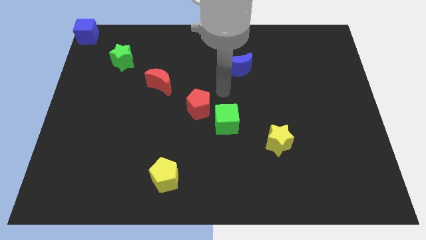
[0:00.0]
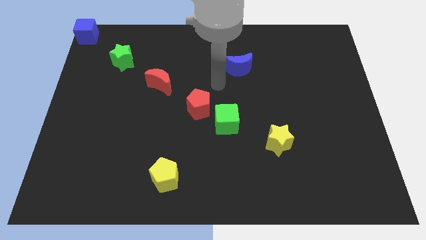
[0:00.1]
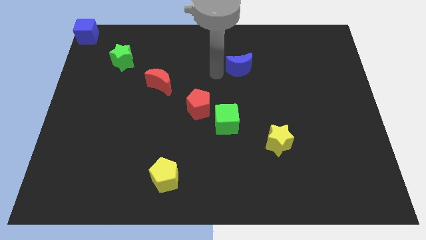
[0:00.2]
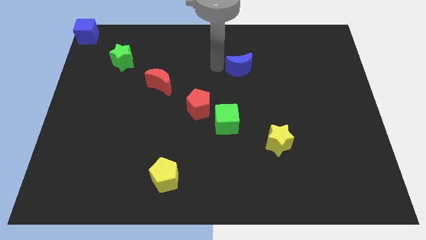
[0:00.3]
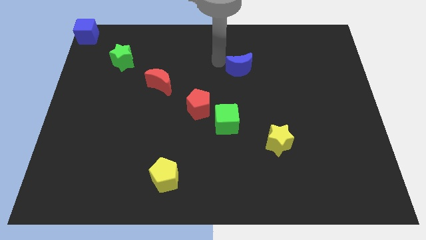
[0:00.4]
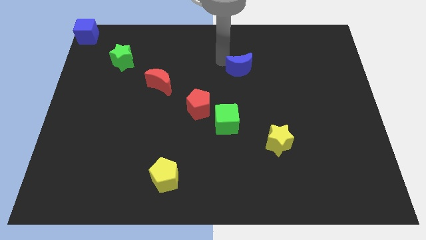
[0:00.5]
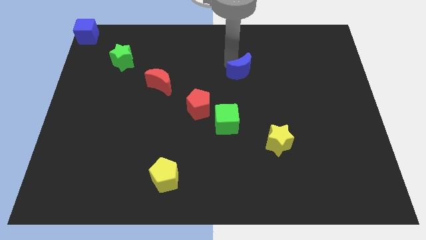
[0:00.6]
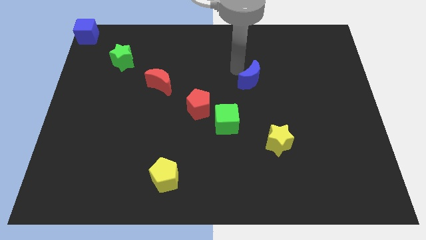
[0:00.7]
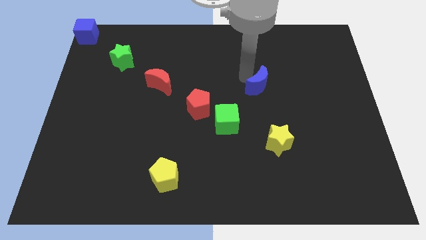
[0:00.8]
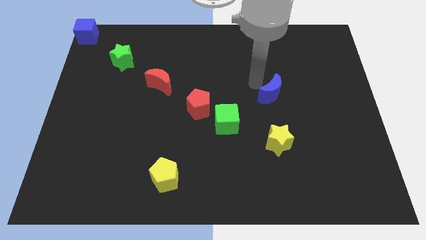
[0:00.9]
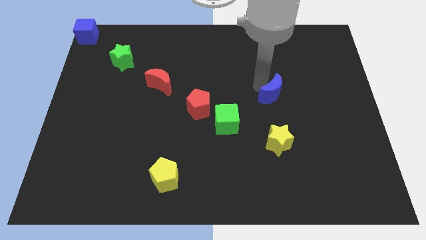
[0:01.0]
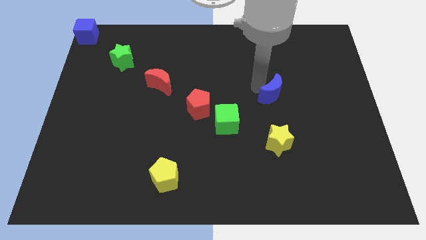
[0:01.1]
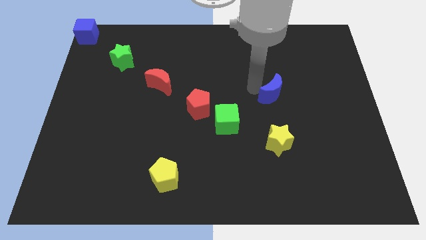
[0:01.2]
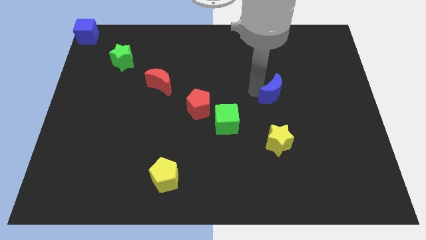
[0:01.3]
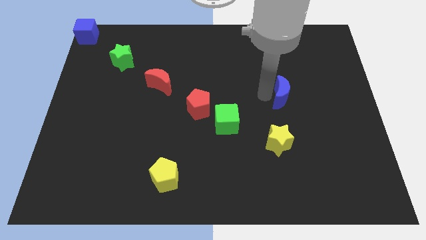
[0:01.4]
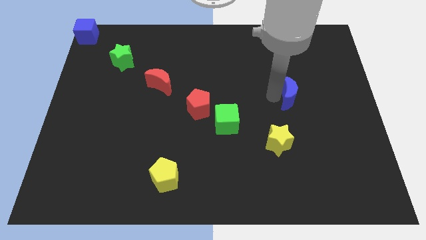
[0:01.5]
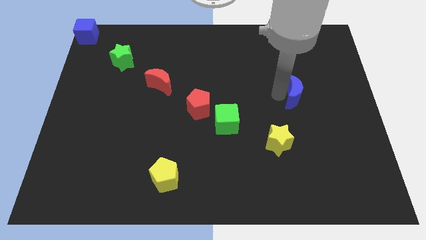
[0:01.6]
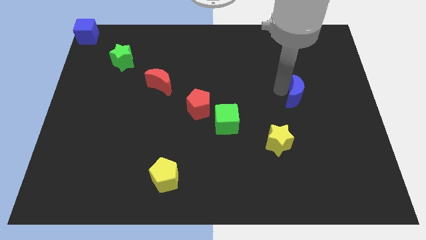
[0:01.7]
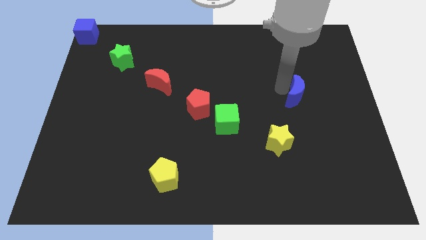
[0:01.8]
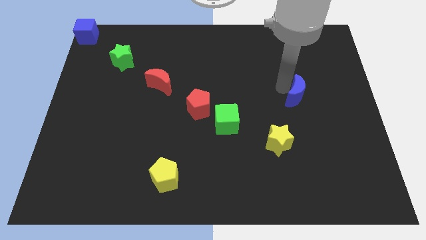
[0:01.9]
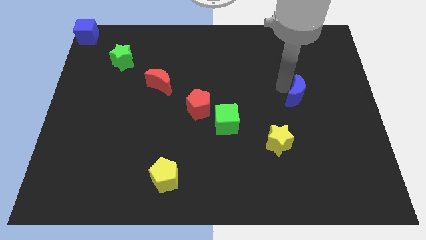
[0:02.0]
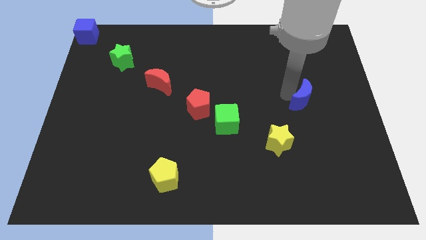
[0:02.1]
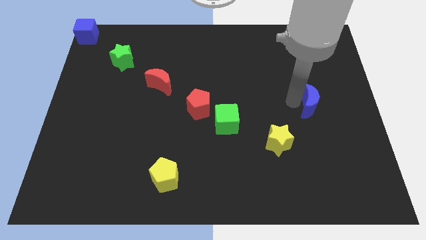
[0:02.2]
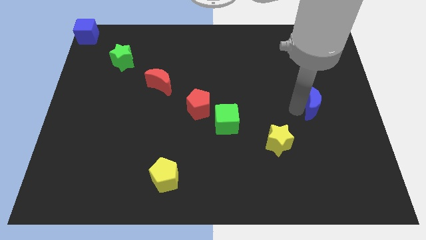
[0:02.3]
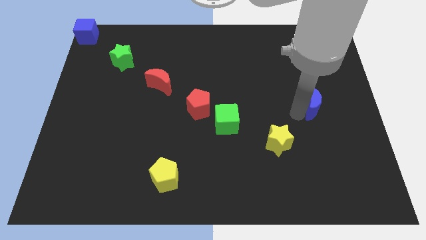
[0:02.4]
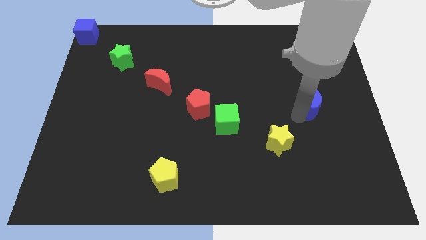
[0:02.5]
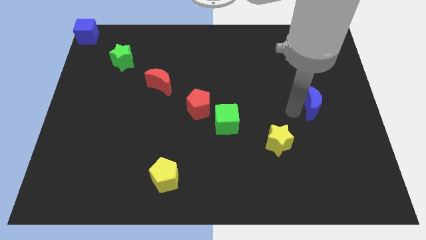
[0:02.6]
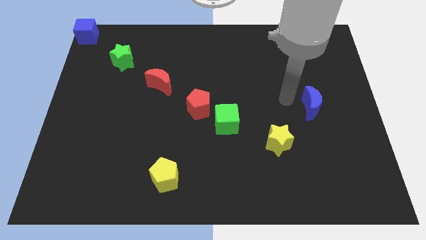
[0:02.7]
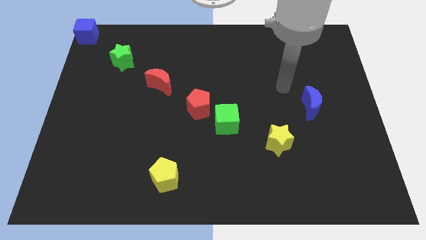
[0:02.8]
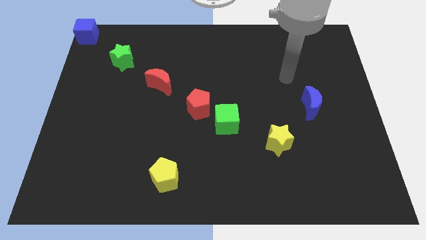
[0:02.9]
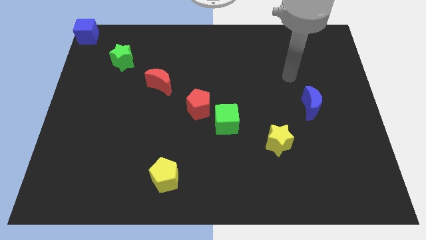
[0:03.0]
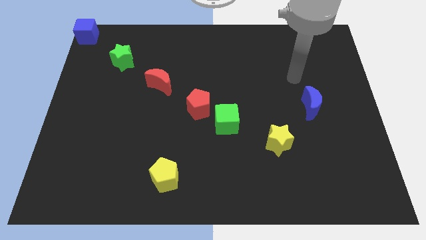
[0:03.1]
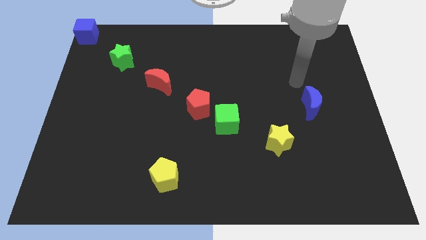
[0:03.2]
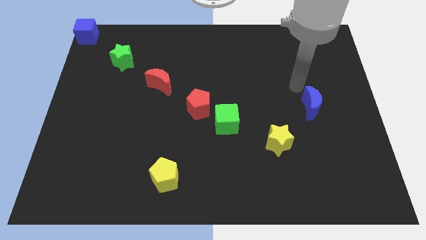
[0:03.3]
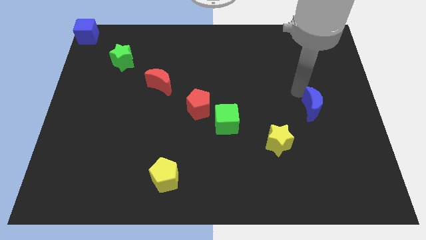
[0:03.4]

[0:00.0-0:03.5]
move the blue crescent to the top right of the yellow star

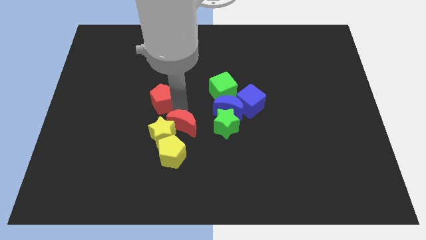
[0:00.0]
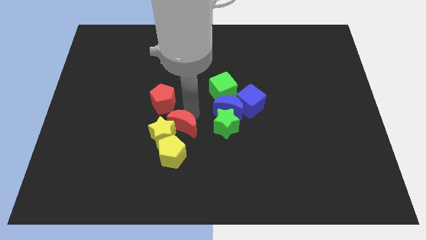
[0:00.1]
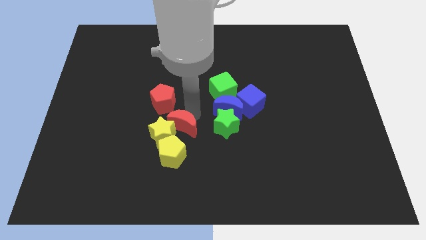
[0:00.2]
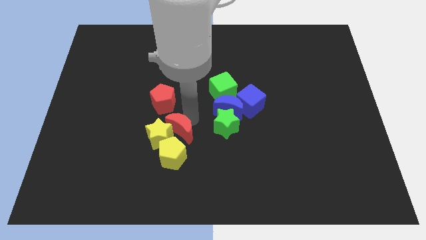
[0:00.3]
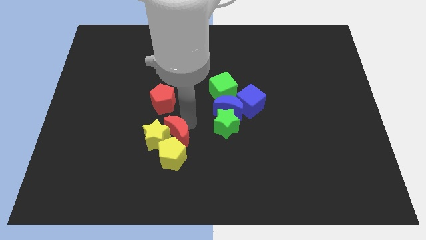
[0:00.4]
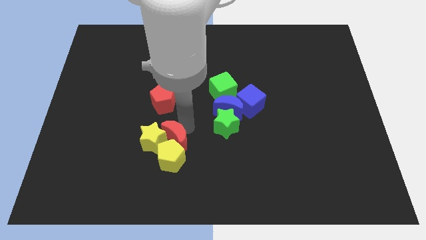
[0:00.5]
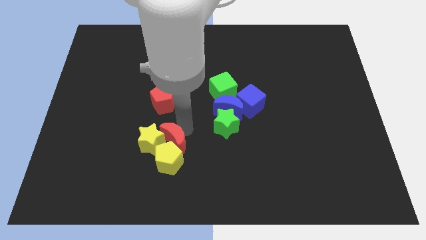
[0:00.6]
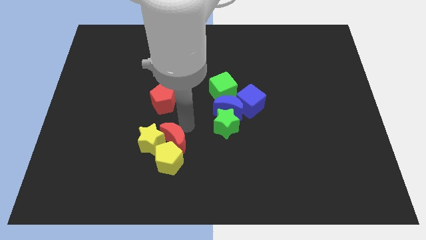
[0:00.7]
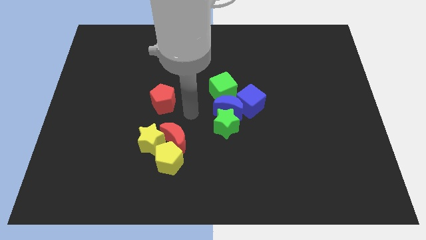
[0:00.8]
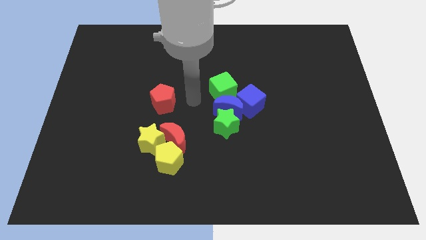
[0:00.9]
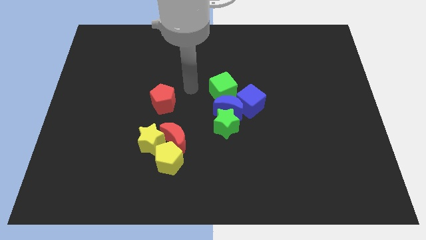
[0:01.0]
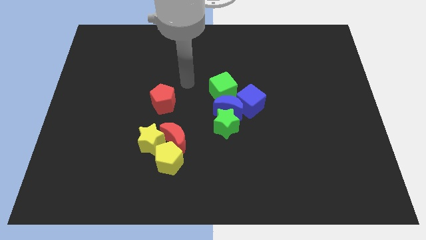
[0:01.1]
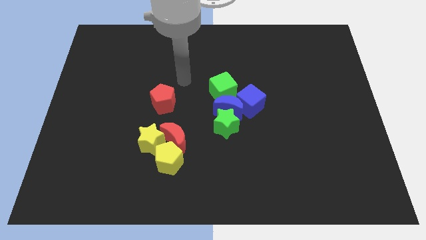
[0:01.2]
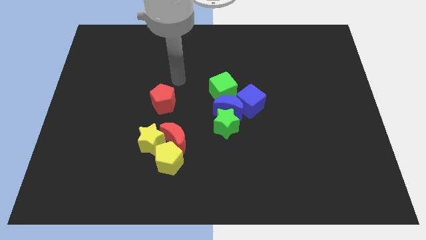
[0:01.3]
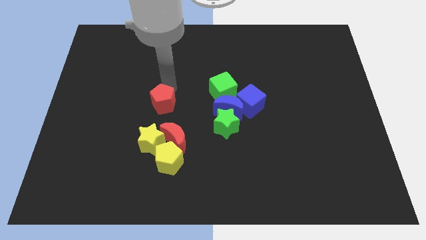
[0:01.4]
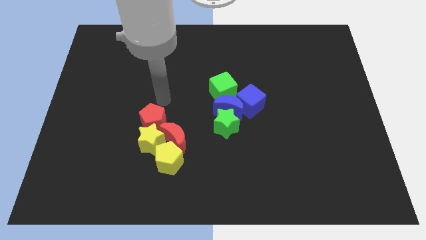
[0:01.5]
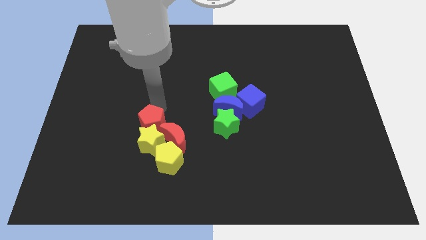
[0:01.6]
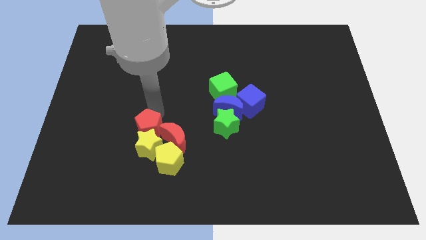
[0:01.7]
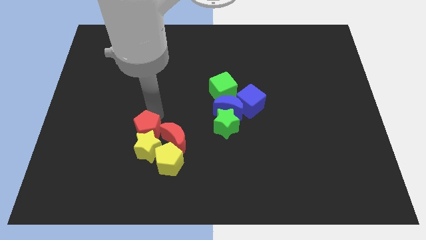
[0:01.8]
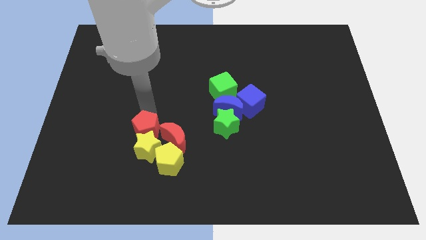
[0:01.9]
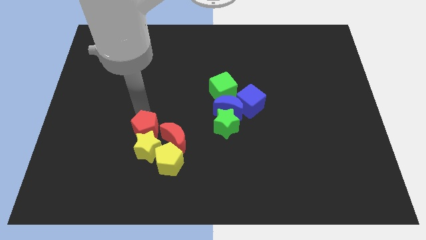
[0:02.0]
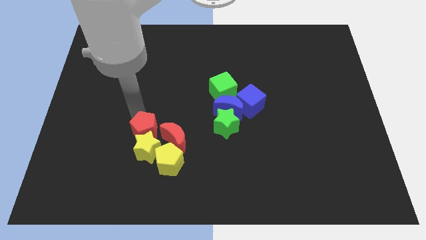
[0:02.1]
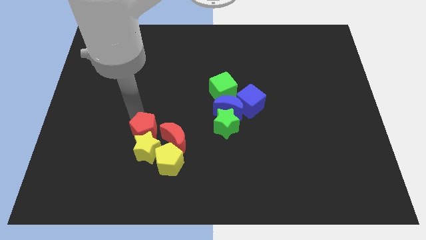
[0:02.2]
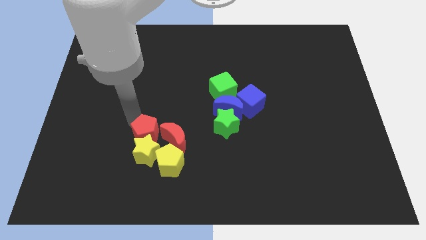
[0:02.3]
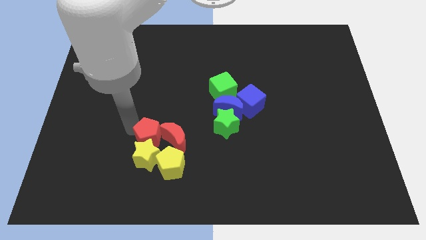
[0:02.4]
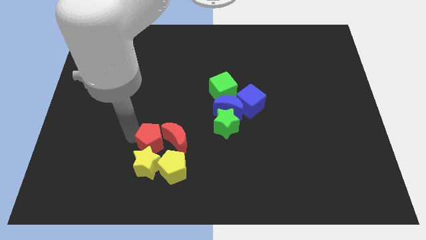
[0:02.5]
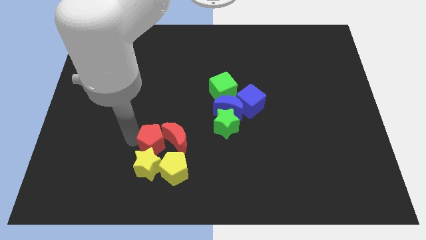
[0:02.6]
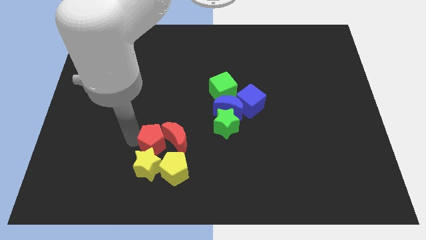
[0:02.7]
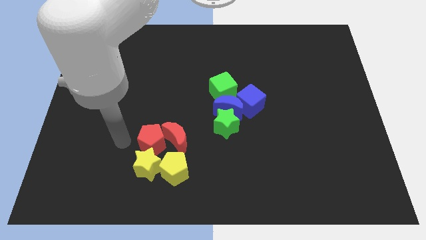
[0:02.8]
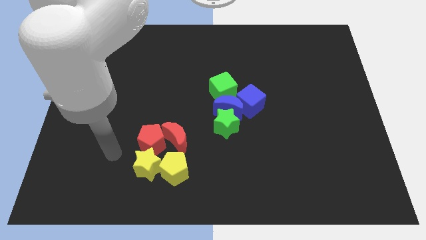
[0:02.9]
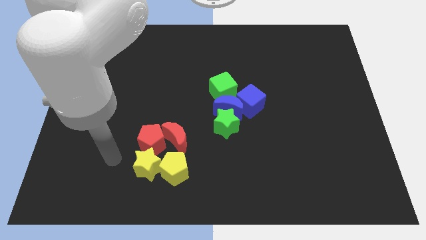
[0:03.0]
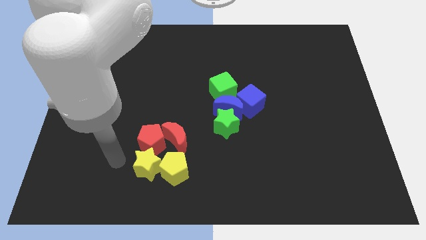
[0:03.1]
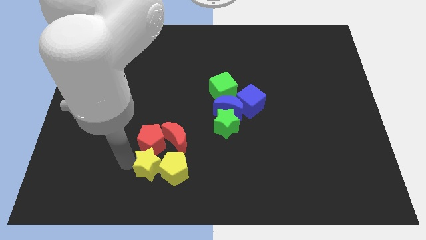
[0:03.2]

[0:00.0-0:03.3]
push the red moon into the yellow star

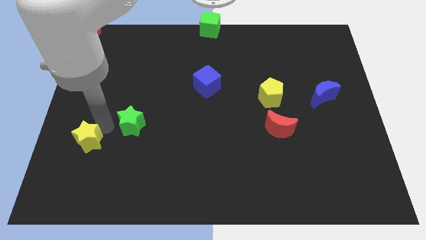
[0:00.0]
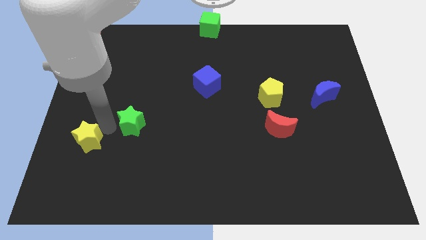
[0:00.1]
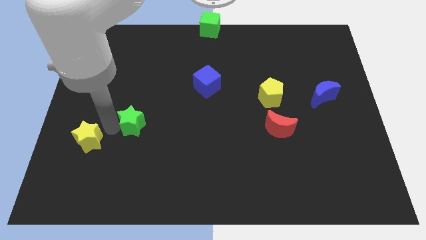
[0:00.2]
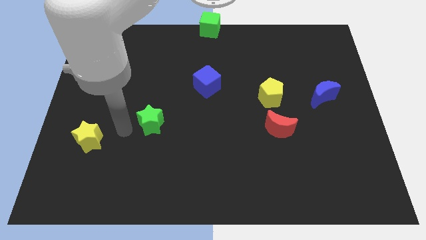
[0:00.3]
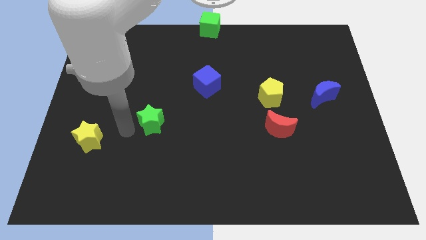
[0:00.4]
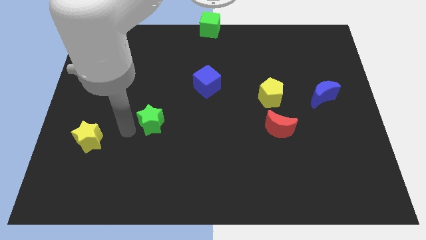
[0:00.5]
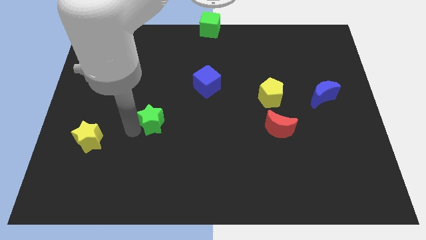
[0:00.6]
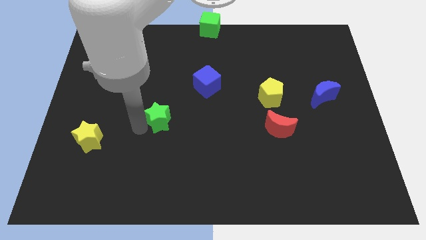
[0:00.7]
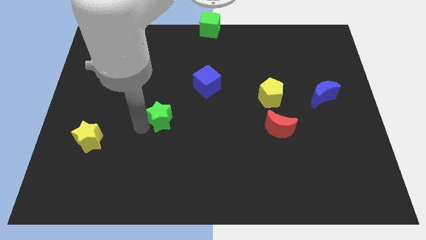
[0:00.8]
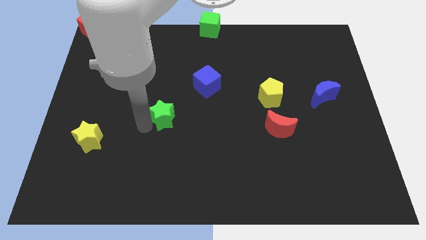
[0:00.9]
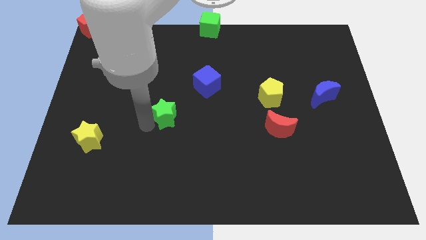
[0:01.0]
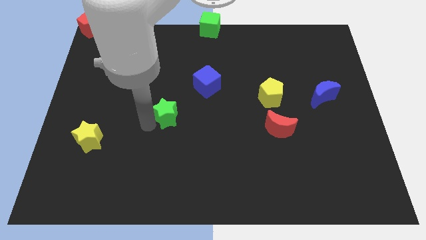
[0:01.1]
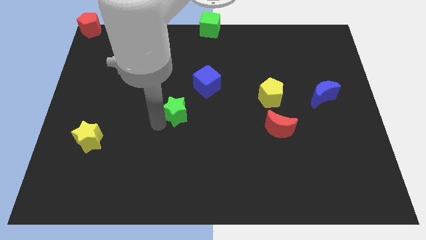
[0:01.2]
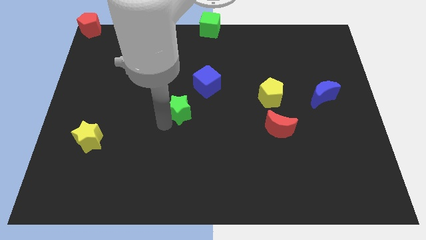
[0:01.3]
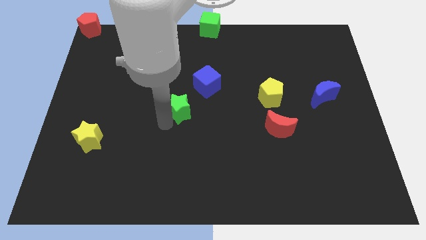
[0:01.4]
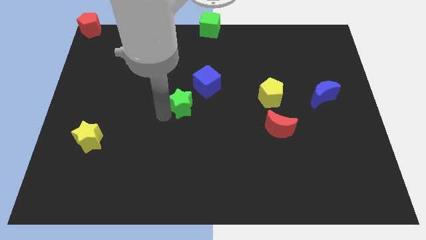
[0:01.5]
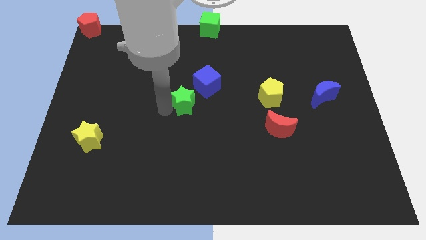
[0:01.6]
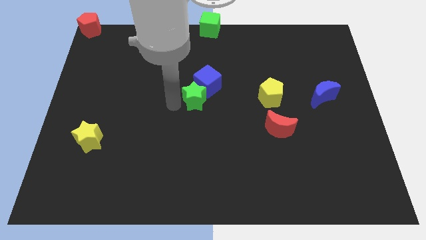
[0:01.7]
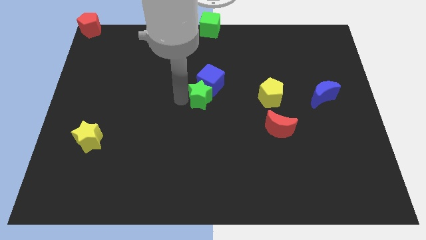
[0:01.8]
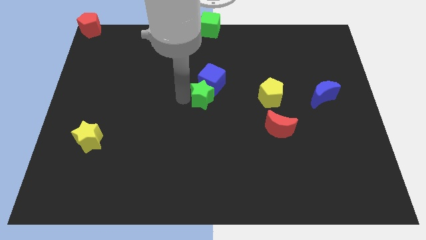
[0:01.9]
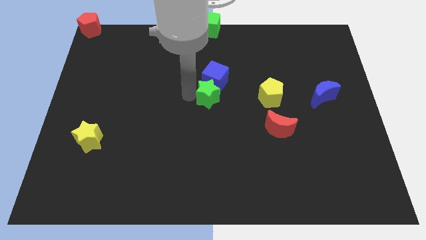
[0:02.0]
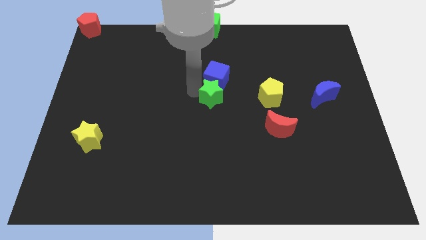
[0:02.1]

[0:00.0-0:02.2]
push green star into blue cube
